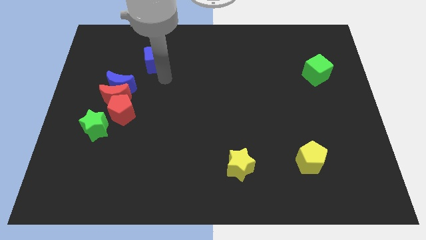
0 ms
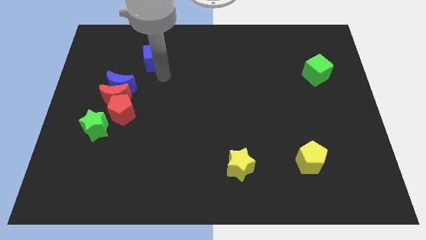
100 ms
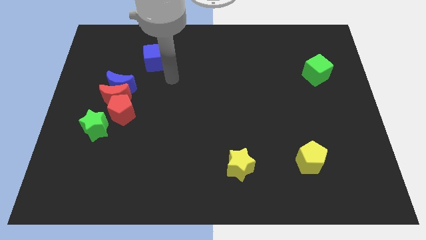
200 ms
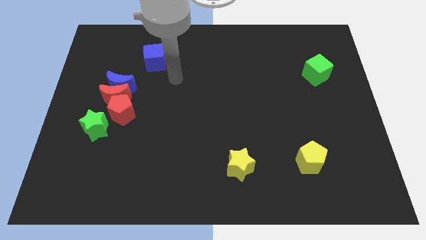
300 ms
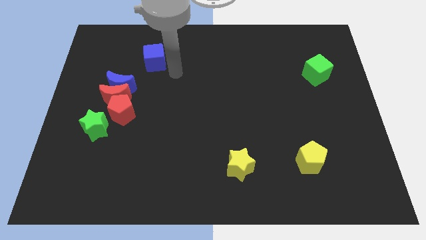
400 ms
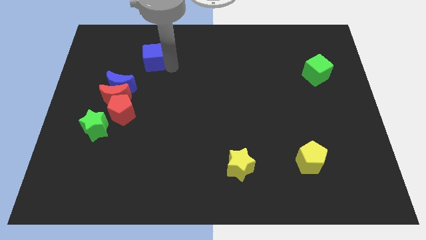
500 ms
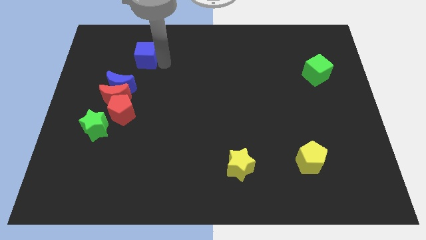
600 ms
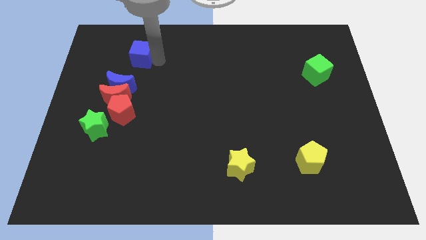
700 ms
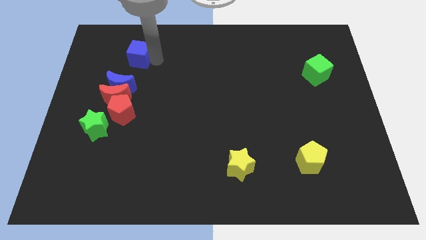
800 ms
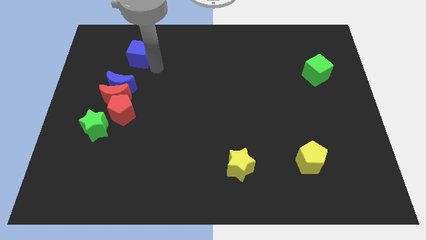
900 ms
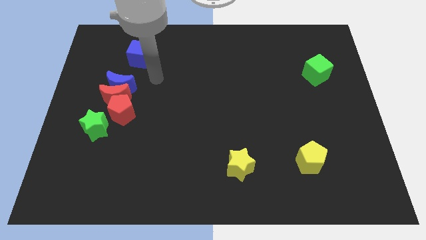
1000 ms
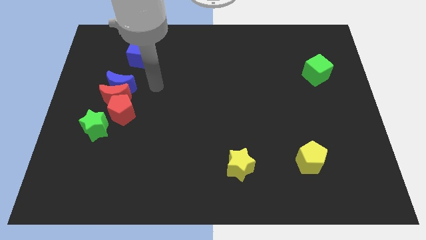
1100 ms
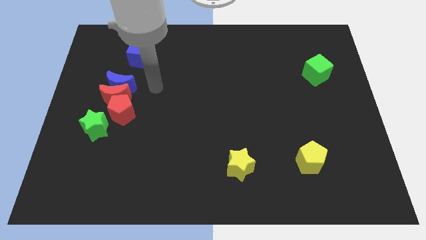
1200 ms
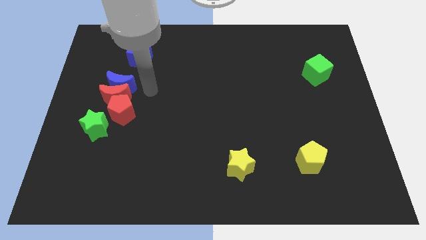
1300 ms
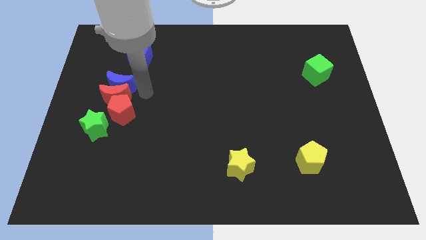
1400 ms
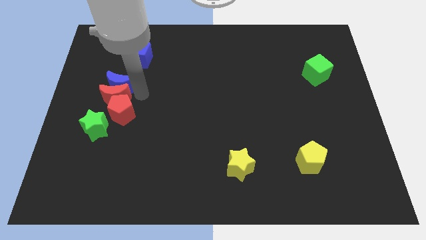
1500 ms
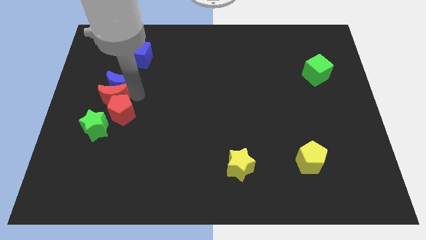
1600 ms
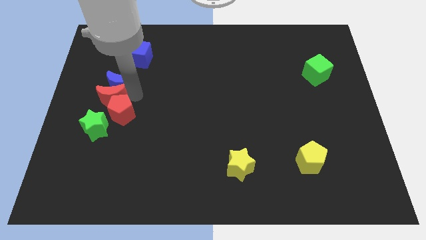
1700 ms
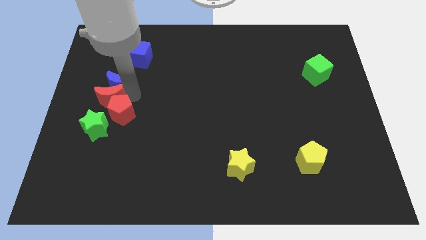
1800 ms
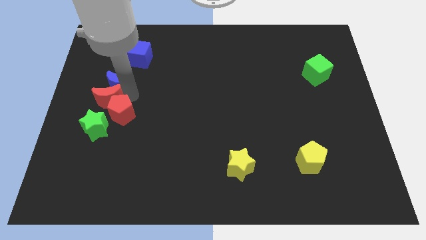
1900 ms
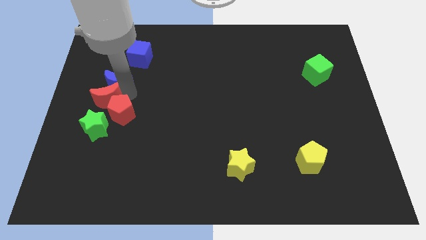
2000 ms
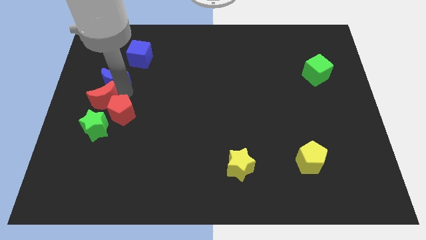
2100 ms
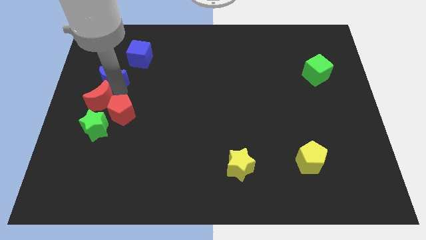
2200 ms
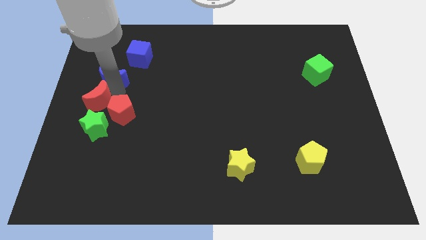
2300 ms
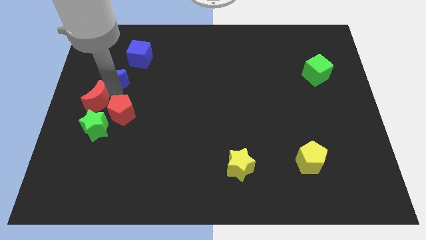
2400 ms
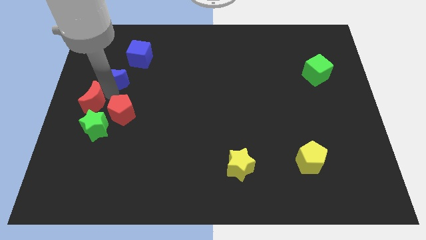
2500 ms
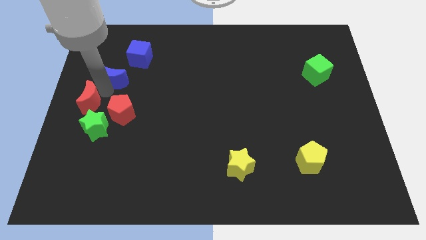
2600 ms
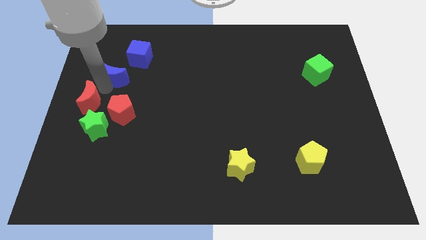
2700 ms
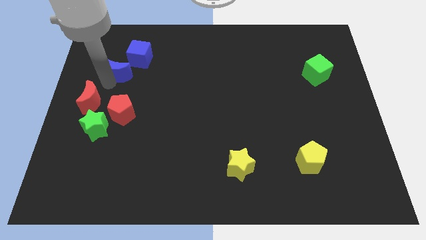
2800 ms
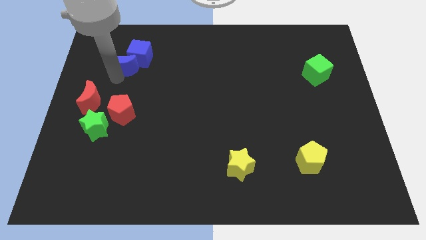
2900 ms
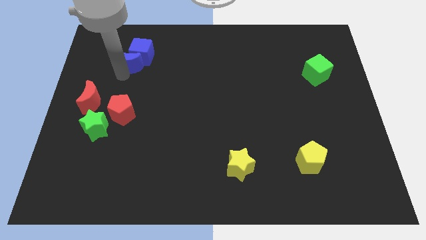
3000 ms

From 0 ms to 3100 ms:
touch the group of objects

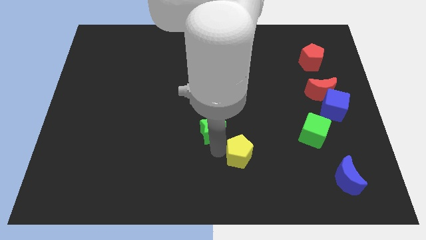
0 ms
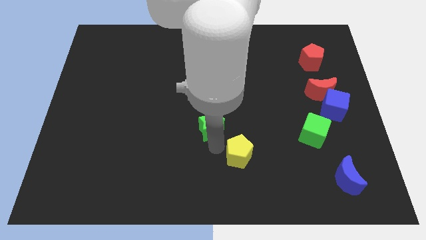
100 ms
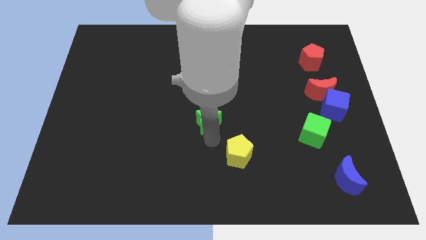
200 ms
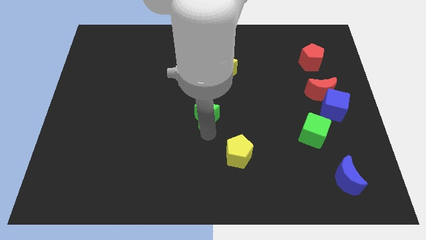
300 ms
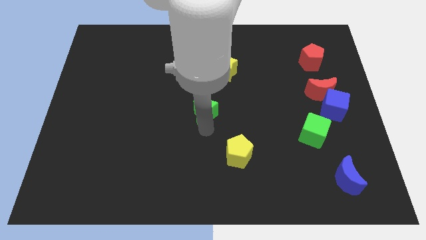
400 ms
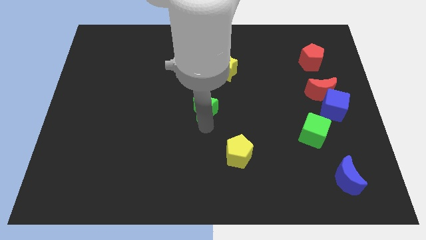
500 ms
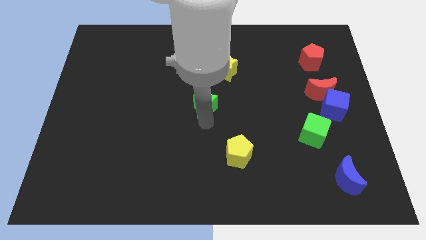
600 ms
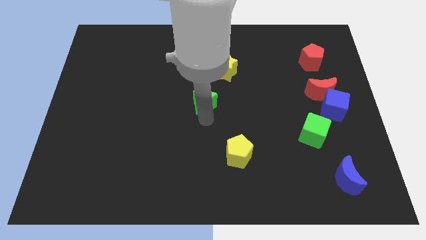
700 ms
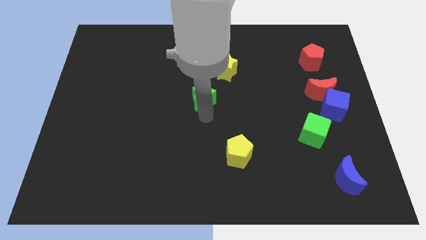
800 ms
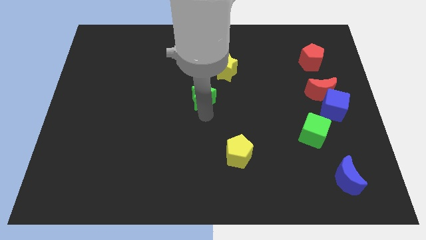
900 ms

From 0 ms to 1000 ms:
push the green star slightly to the top of the board

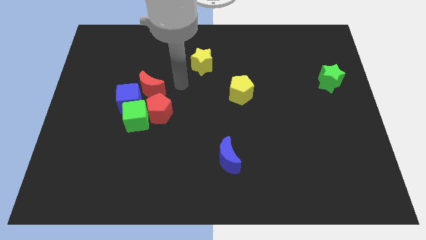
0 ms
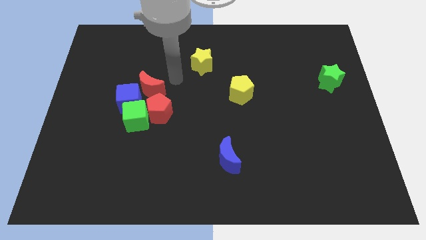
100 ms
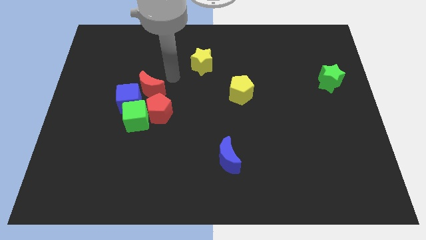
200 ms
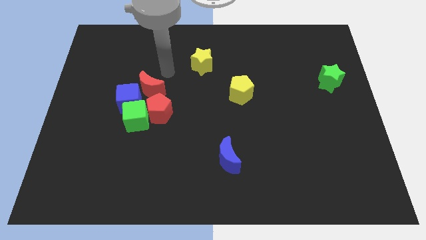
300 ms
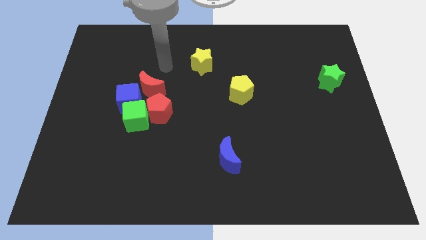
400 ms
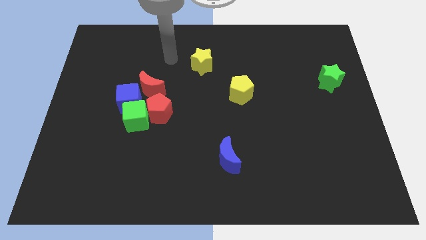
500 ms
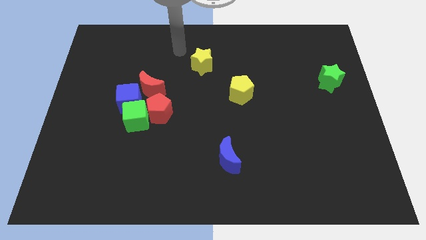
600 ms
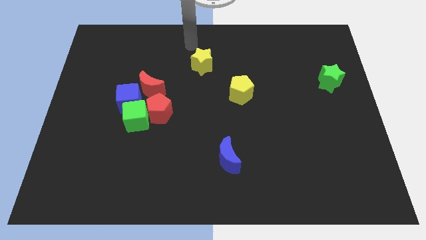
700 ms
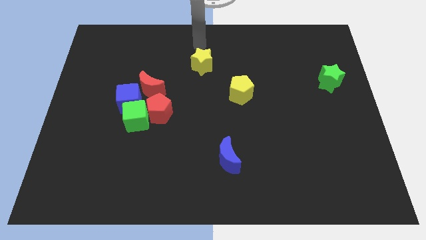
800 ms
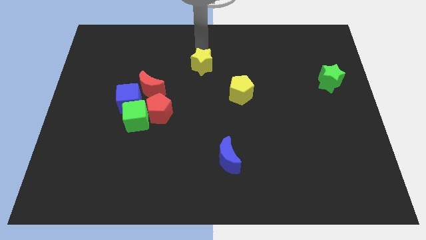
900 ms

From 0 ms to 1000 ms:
point your hand at the top side of the yellow star

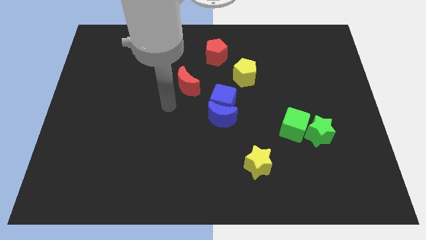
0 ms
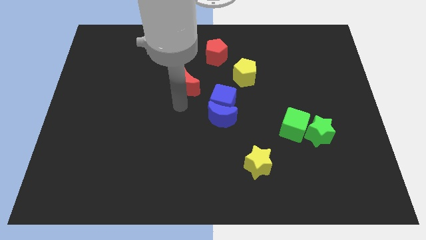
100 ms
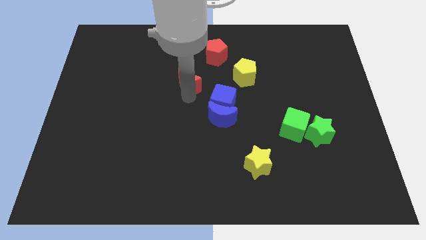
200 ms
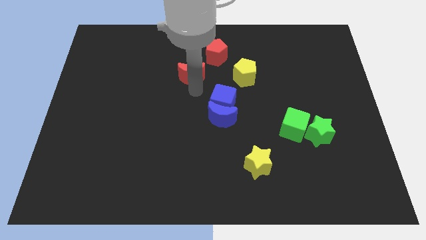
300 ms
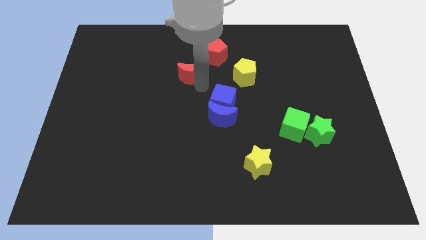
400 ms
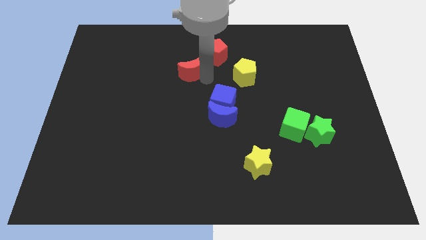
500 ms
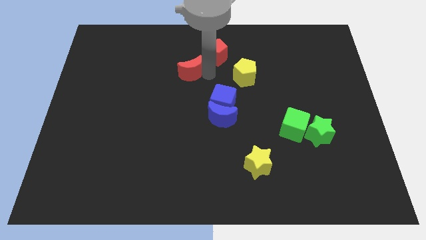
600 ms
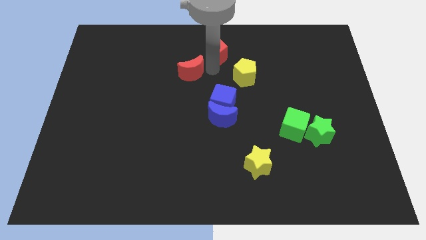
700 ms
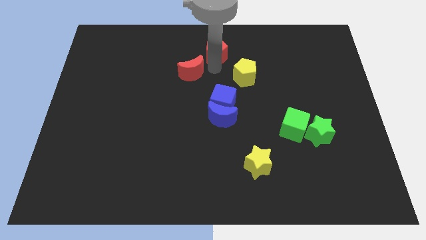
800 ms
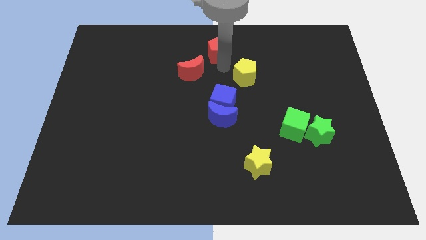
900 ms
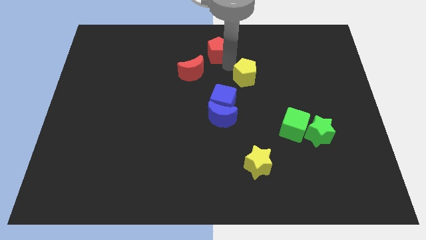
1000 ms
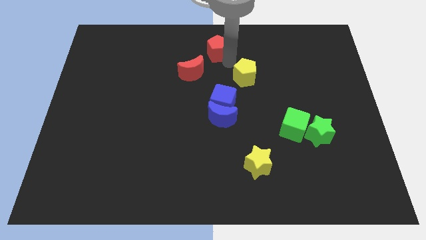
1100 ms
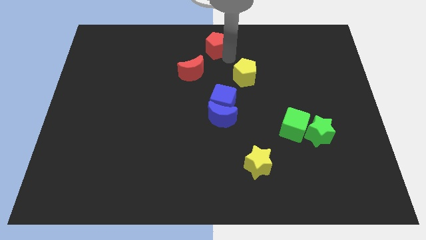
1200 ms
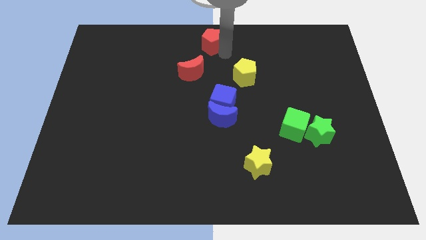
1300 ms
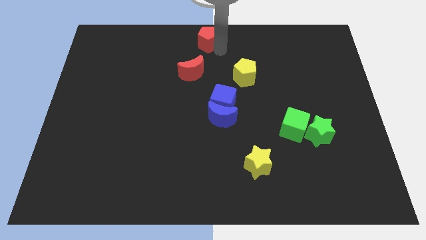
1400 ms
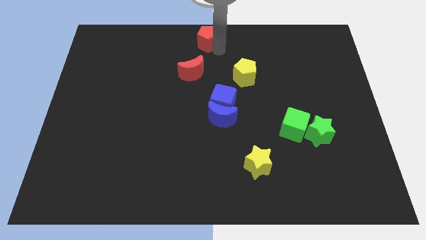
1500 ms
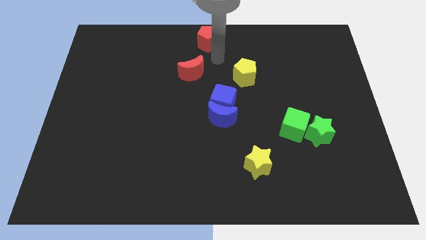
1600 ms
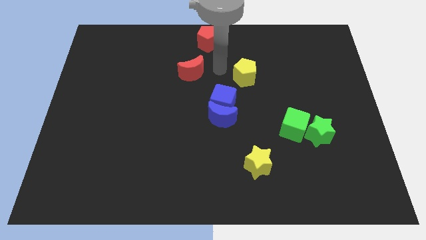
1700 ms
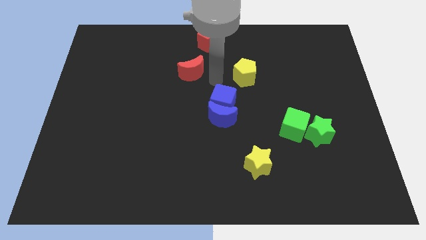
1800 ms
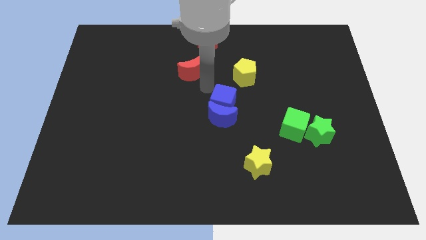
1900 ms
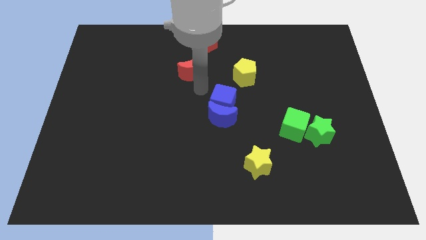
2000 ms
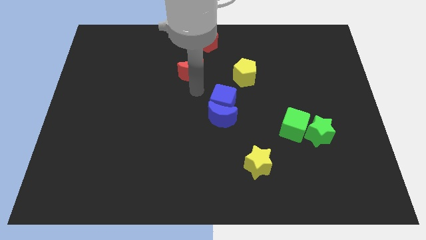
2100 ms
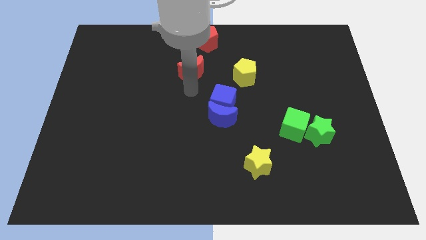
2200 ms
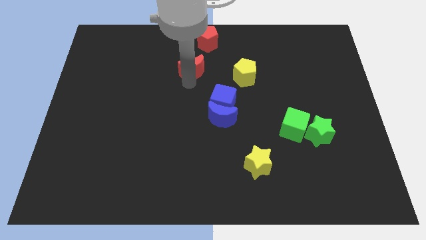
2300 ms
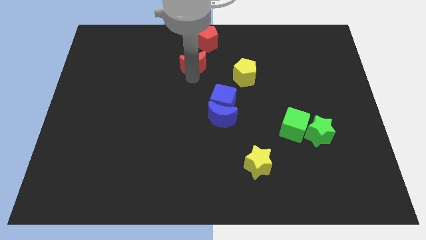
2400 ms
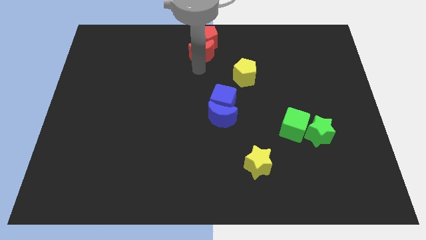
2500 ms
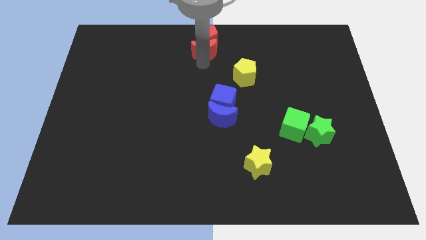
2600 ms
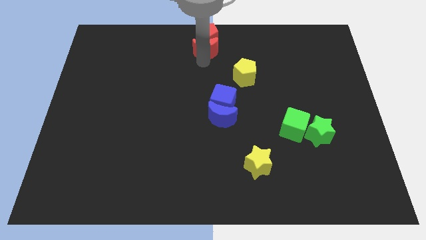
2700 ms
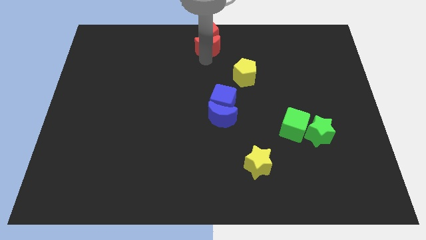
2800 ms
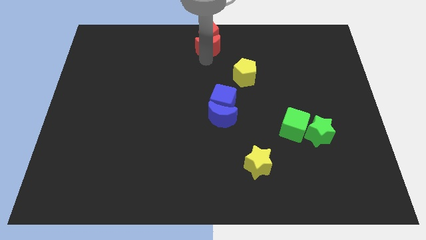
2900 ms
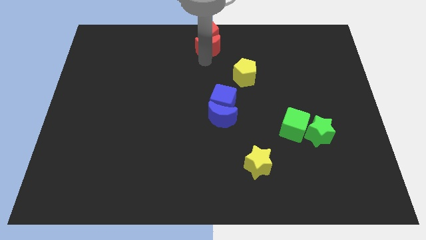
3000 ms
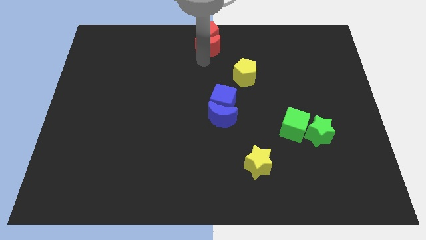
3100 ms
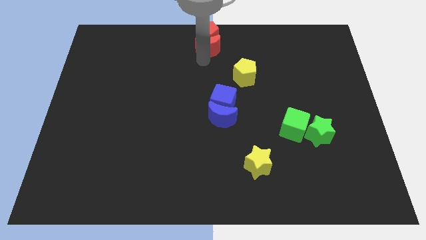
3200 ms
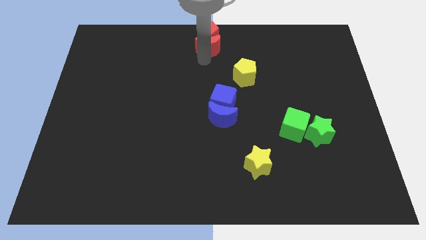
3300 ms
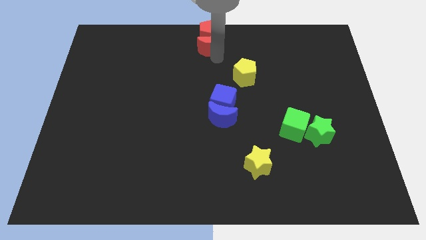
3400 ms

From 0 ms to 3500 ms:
place the red crescent and red pentagon at the top center of the board

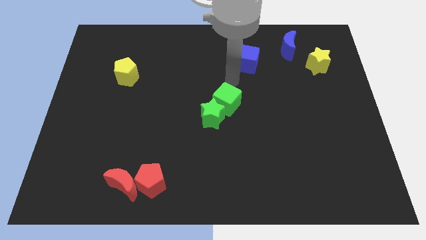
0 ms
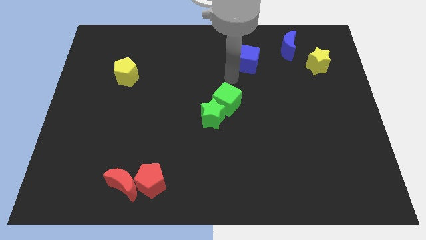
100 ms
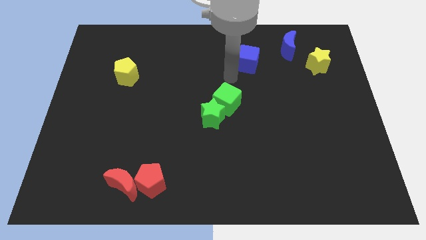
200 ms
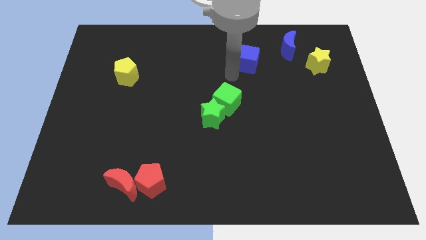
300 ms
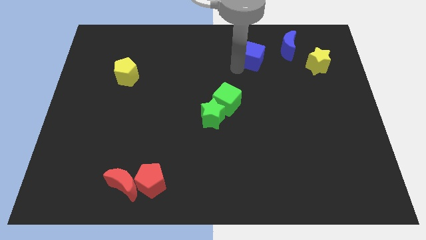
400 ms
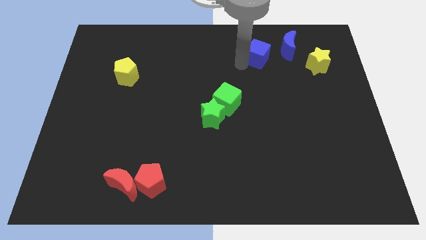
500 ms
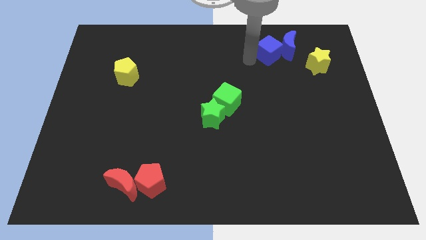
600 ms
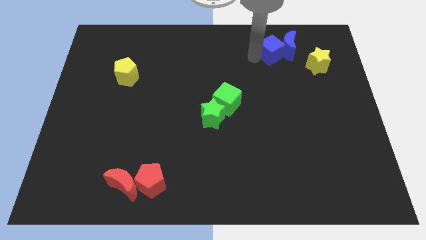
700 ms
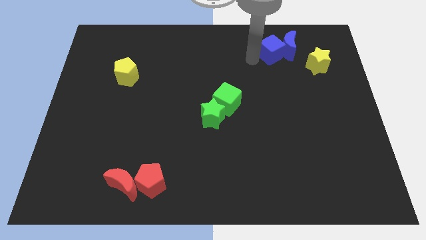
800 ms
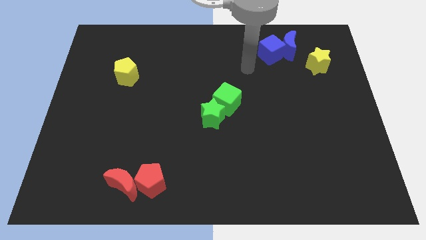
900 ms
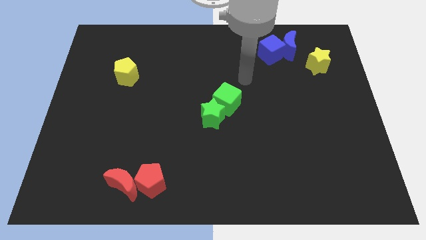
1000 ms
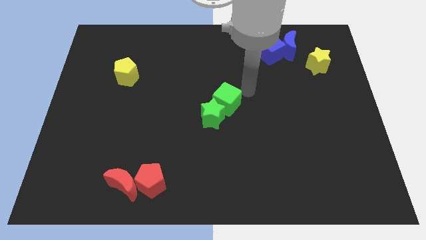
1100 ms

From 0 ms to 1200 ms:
push the blue cube into the blue crescent
